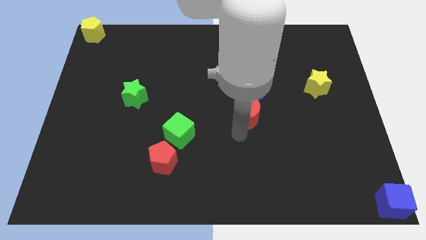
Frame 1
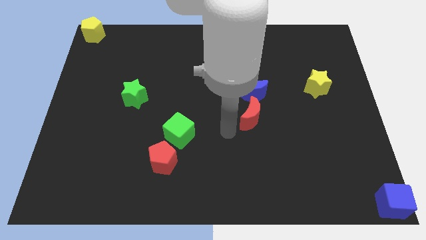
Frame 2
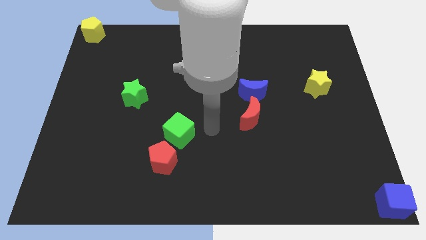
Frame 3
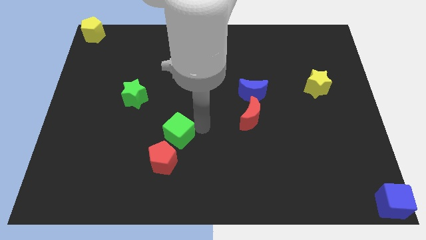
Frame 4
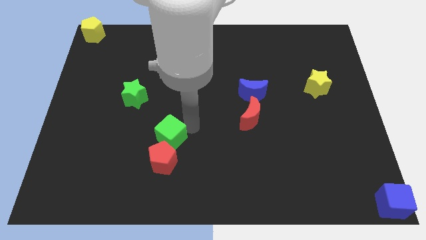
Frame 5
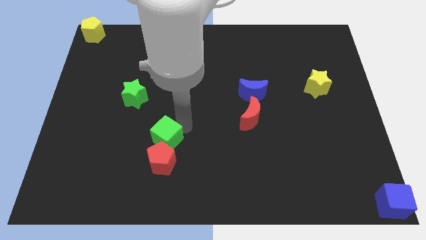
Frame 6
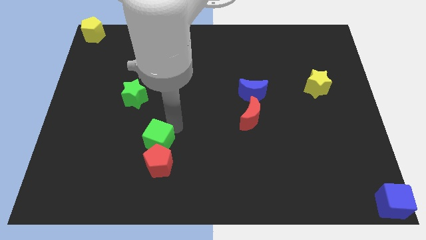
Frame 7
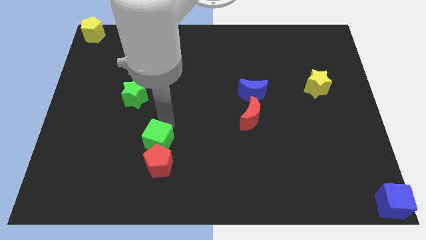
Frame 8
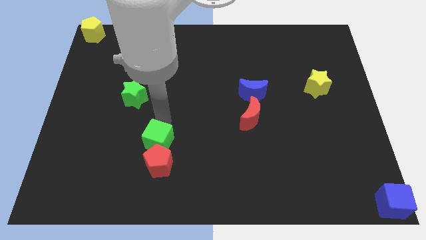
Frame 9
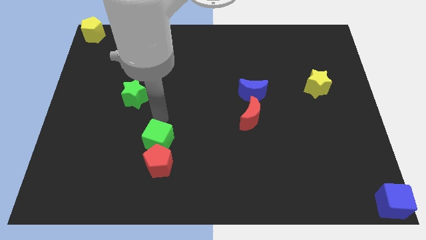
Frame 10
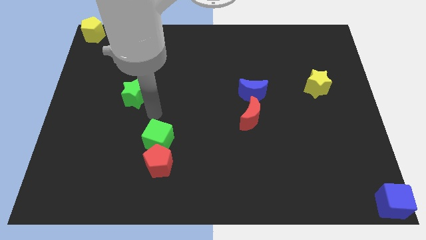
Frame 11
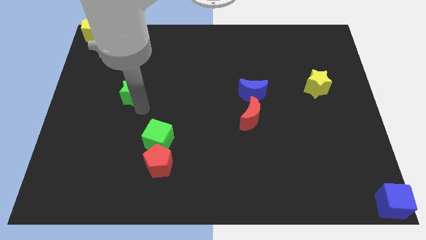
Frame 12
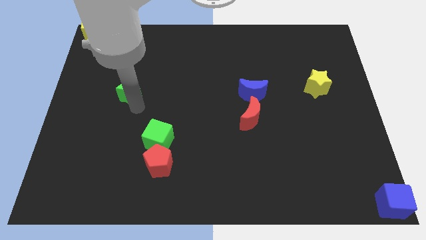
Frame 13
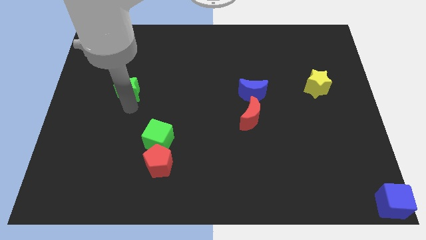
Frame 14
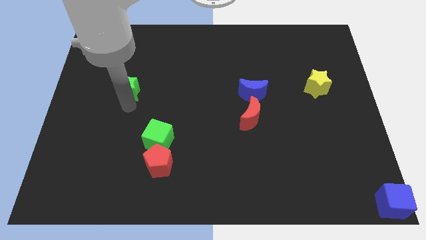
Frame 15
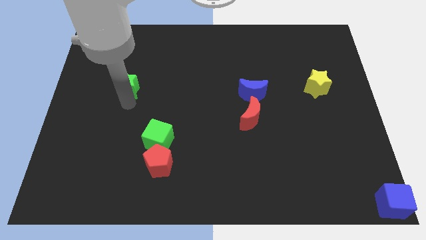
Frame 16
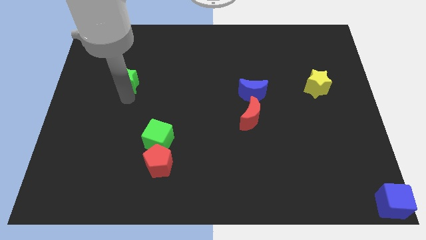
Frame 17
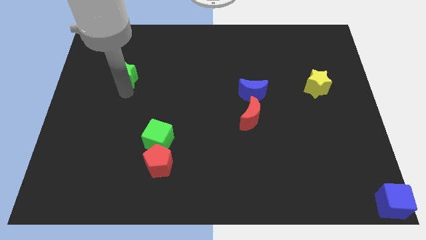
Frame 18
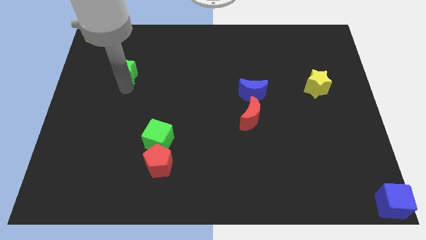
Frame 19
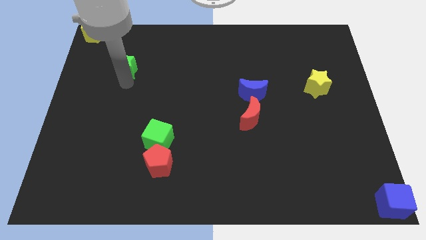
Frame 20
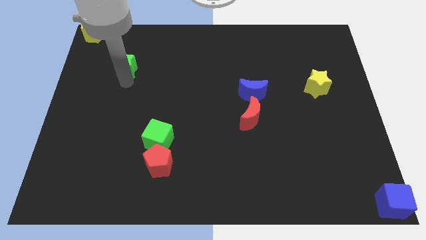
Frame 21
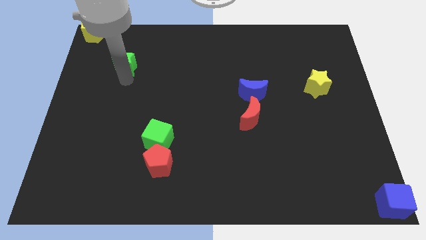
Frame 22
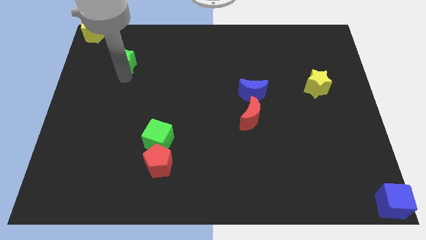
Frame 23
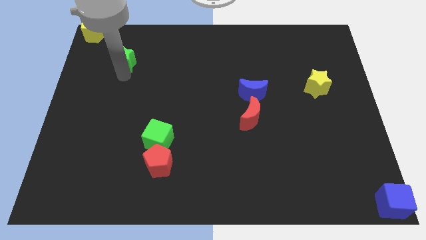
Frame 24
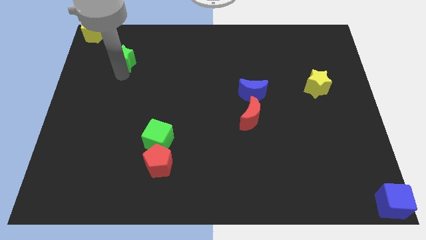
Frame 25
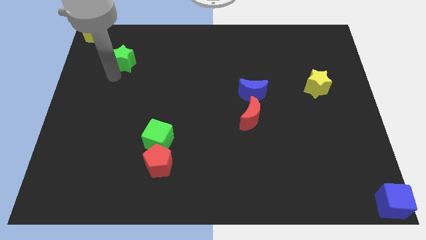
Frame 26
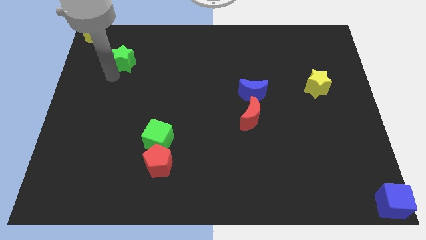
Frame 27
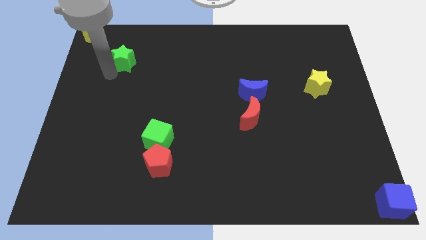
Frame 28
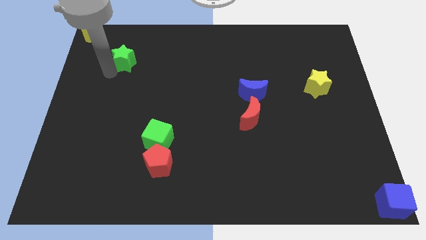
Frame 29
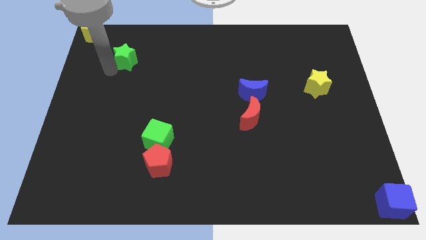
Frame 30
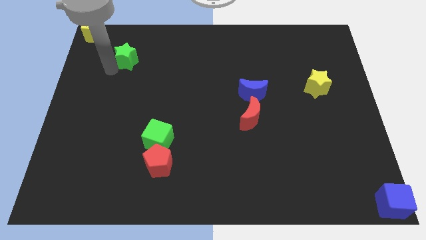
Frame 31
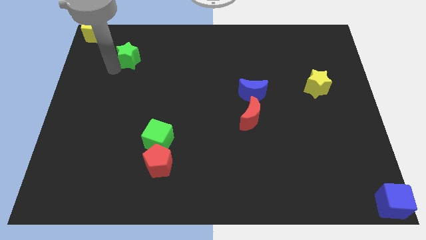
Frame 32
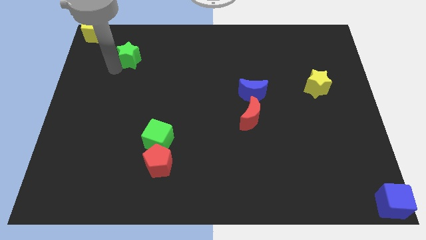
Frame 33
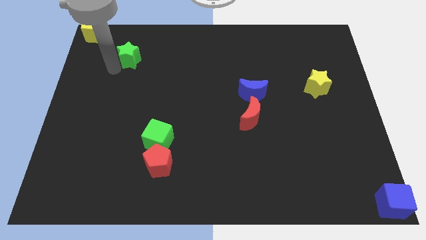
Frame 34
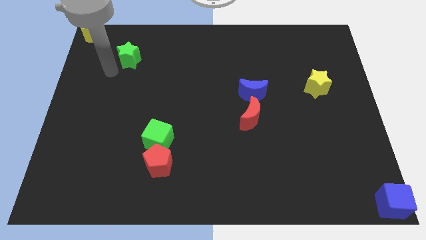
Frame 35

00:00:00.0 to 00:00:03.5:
push green star slightly upwards

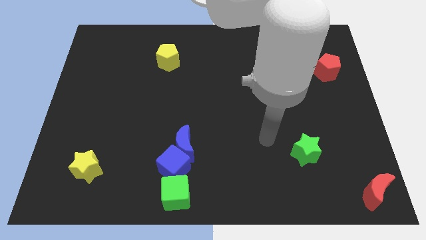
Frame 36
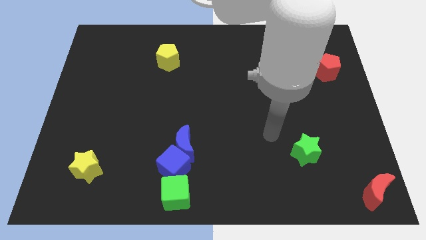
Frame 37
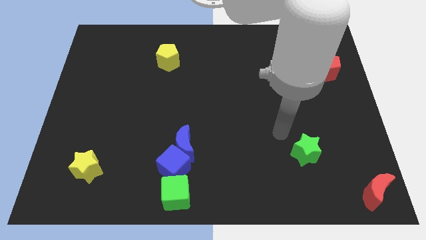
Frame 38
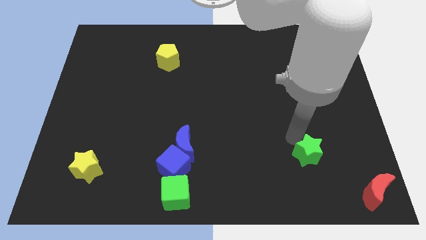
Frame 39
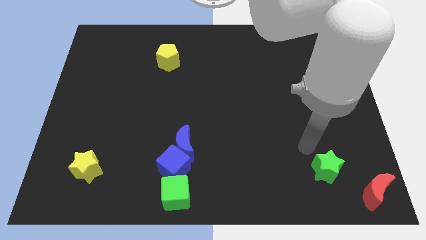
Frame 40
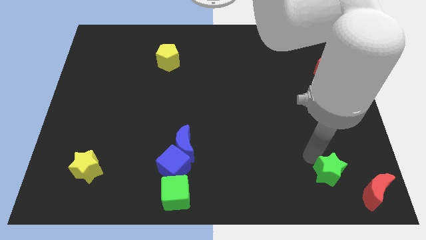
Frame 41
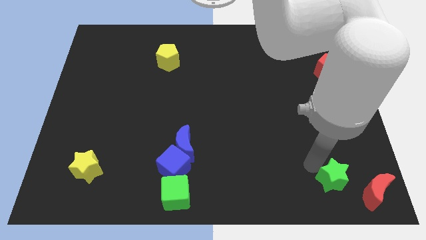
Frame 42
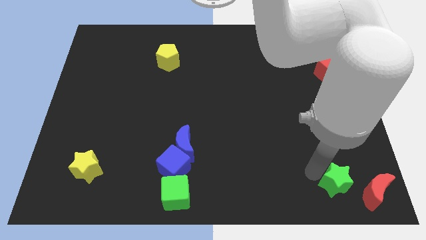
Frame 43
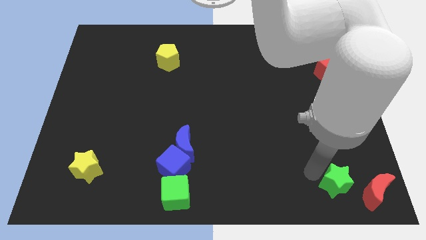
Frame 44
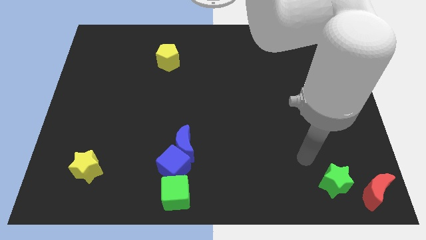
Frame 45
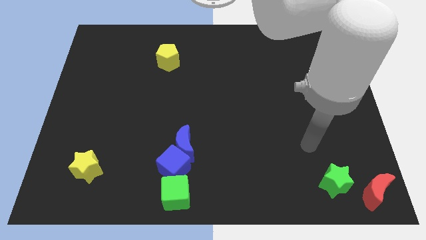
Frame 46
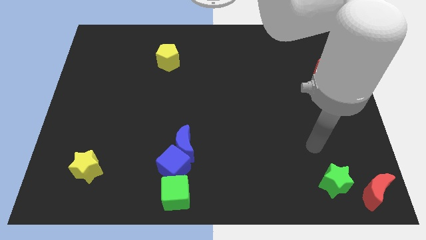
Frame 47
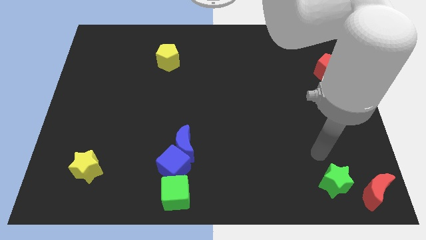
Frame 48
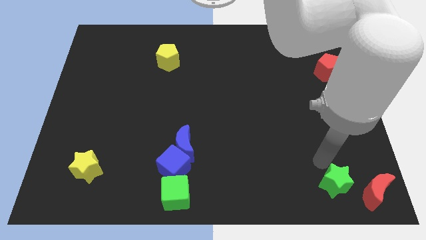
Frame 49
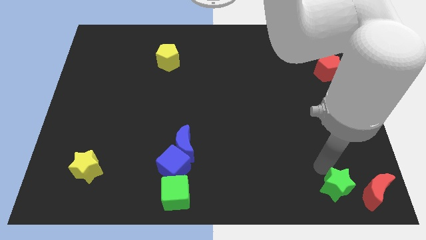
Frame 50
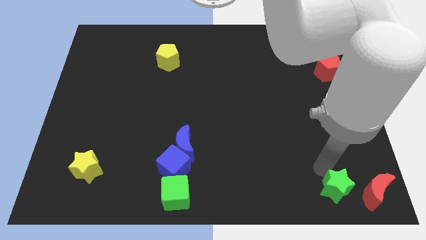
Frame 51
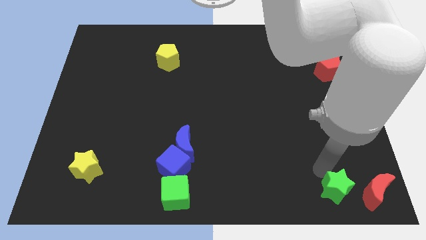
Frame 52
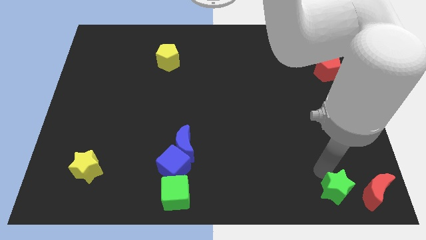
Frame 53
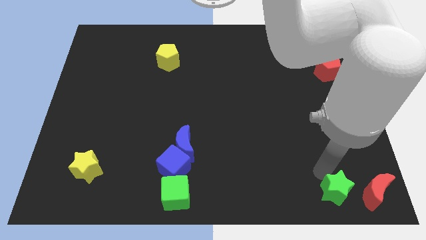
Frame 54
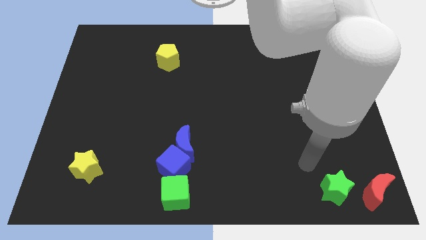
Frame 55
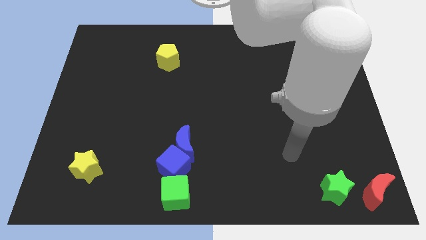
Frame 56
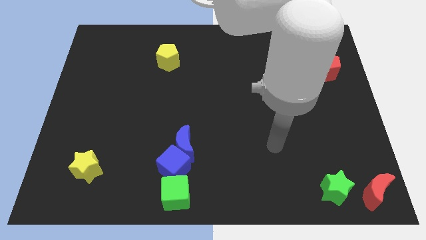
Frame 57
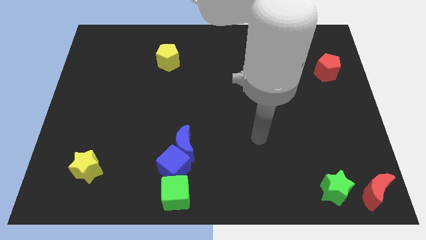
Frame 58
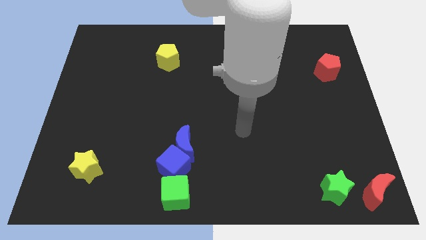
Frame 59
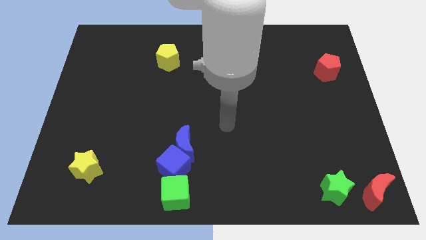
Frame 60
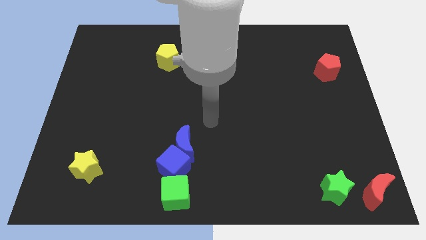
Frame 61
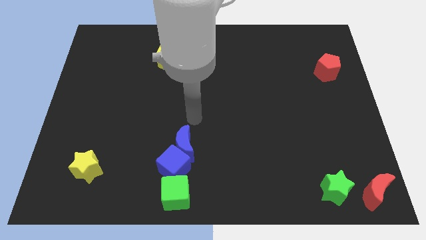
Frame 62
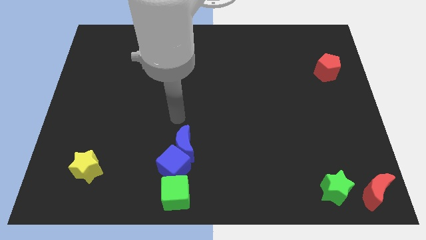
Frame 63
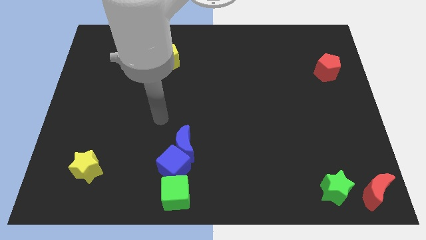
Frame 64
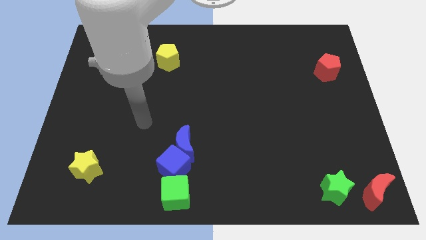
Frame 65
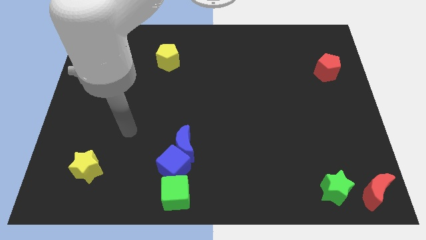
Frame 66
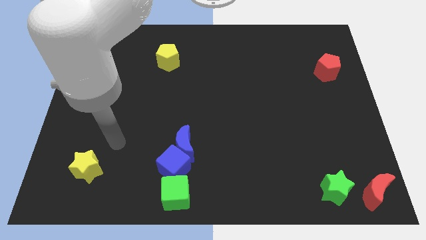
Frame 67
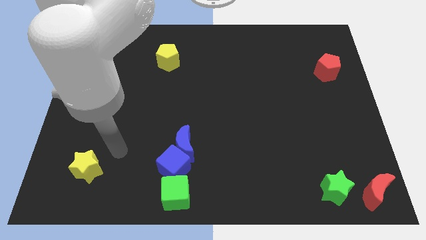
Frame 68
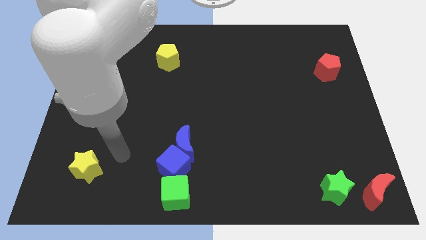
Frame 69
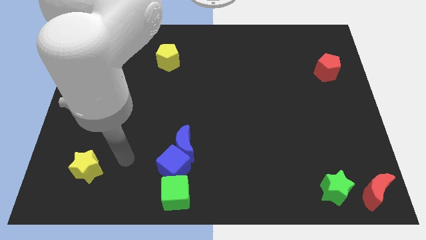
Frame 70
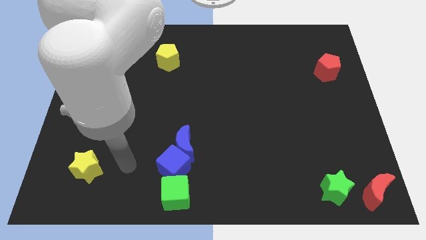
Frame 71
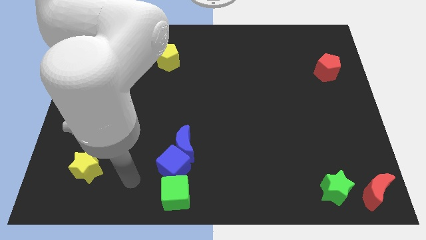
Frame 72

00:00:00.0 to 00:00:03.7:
push the green star to the left of the red crescent

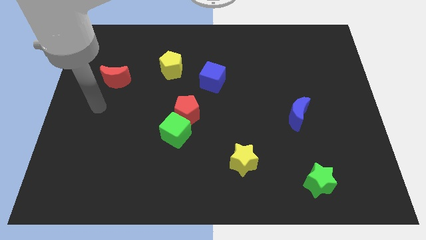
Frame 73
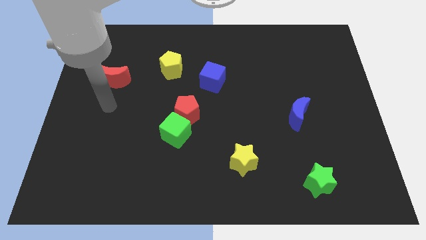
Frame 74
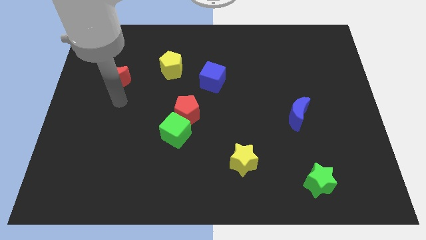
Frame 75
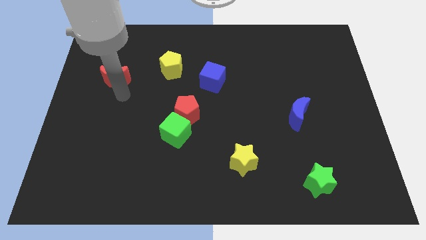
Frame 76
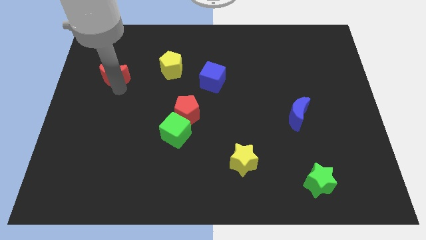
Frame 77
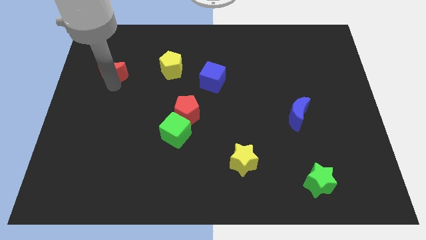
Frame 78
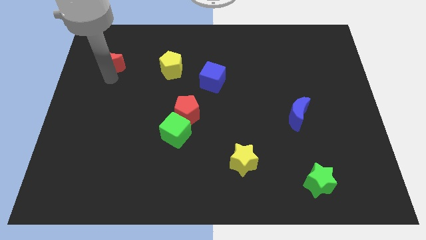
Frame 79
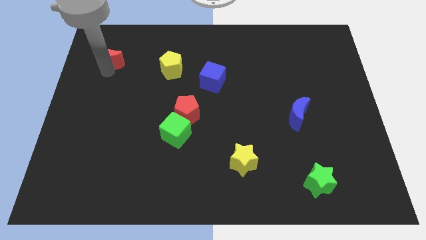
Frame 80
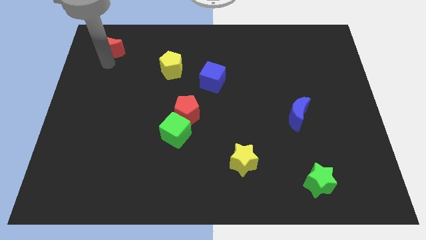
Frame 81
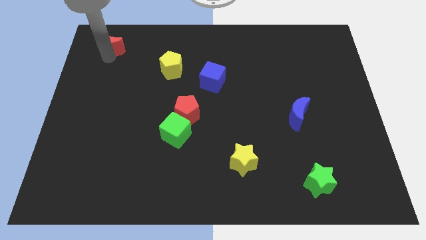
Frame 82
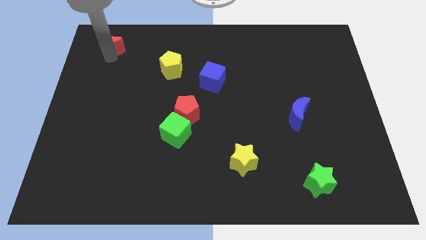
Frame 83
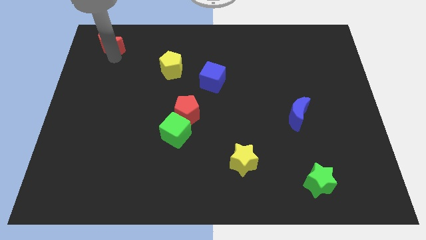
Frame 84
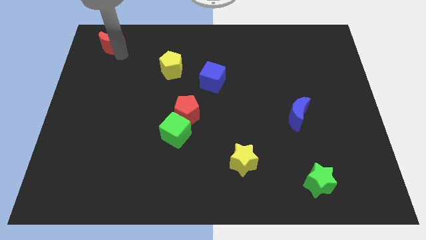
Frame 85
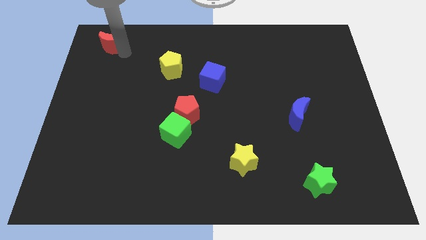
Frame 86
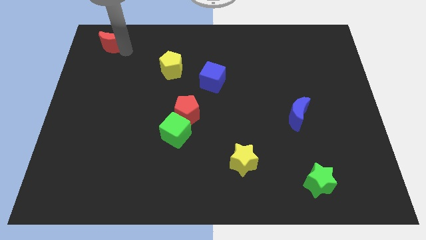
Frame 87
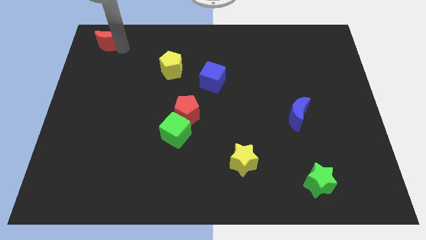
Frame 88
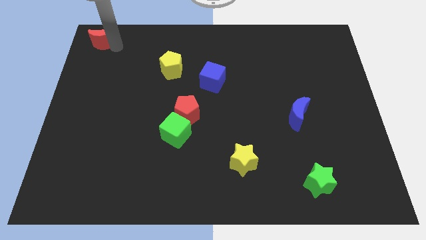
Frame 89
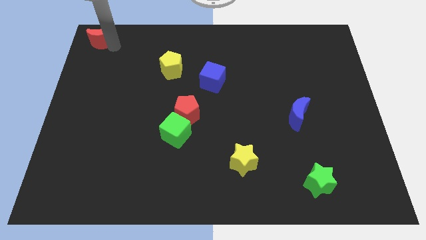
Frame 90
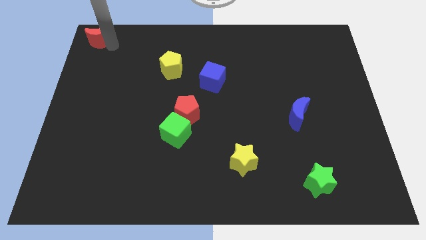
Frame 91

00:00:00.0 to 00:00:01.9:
place the red moon to the top left of the board
